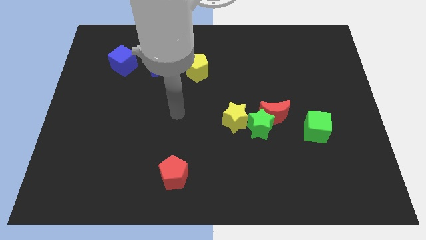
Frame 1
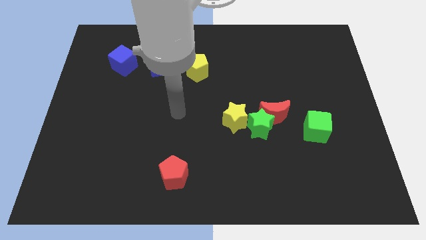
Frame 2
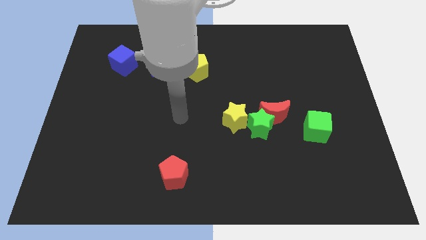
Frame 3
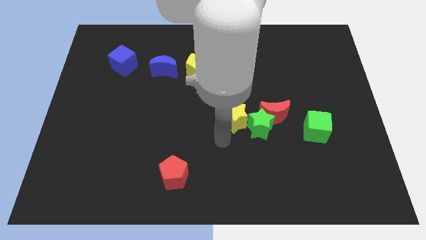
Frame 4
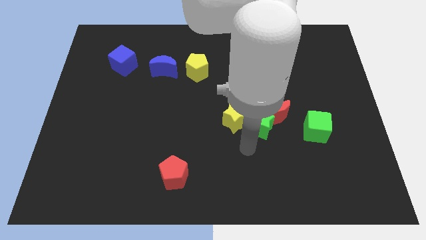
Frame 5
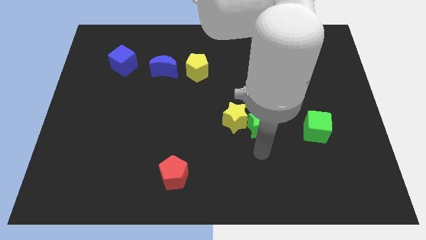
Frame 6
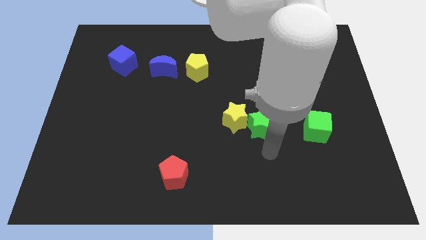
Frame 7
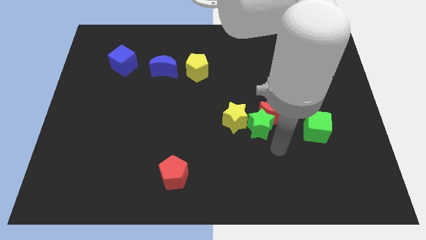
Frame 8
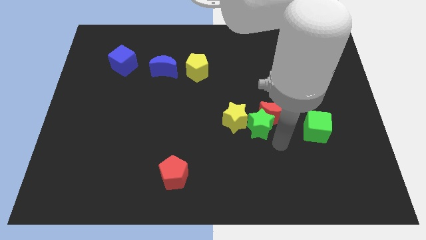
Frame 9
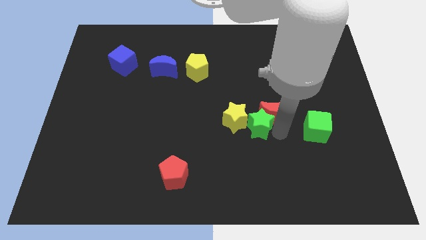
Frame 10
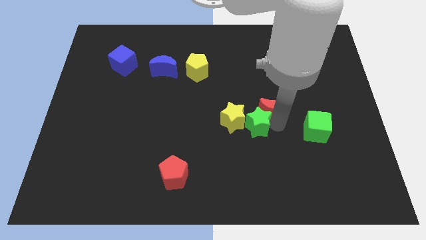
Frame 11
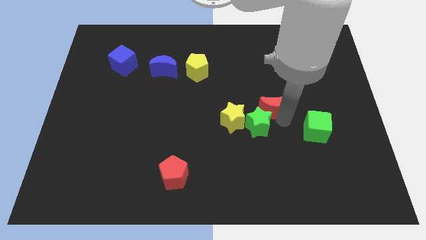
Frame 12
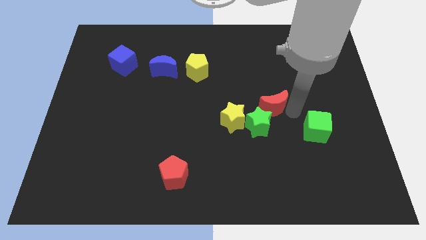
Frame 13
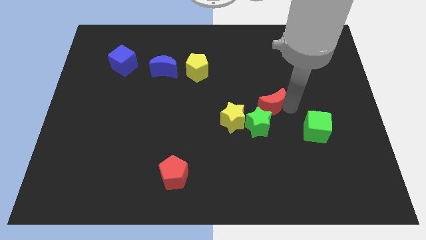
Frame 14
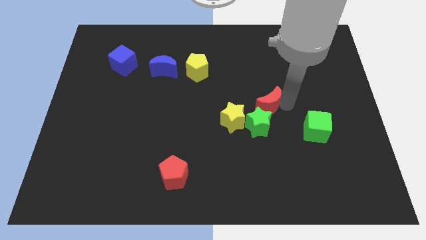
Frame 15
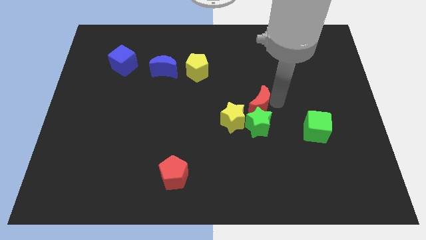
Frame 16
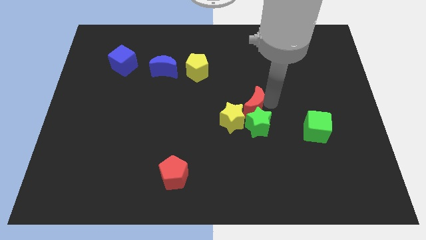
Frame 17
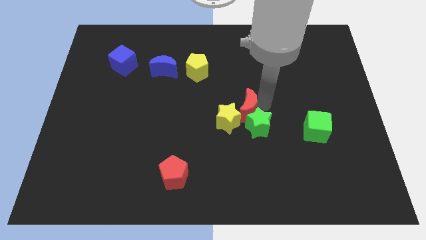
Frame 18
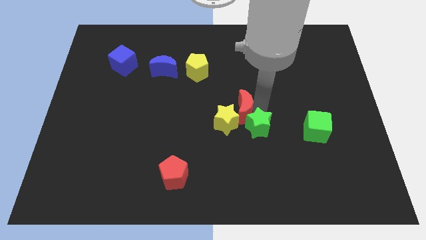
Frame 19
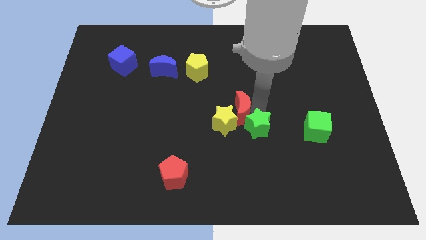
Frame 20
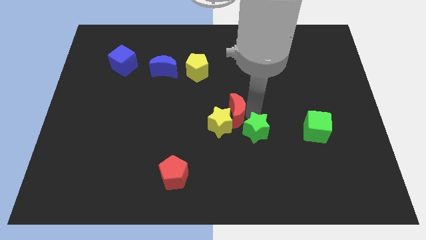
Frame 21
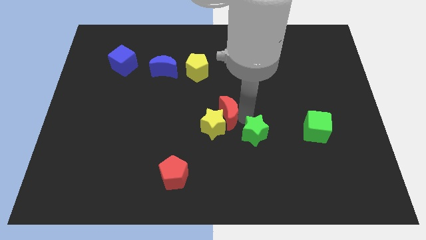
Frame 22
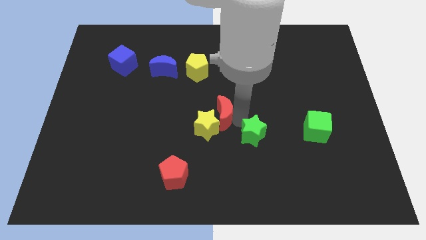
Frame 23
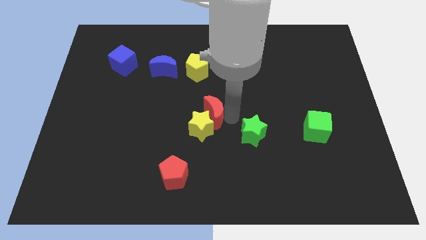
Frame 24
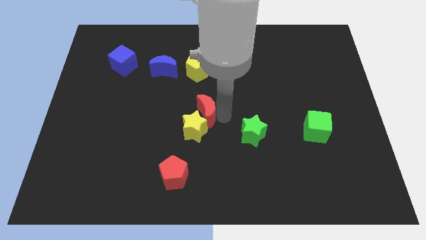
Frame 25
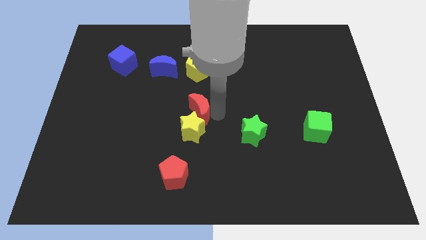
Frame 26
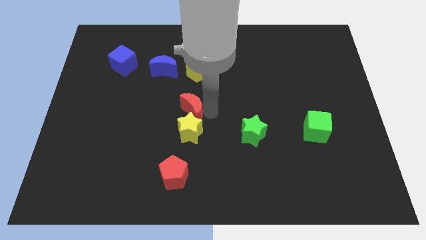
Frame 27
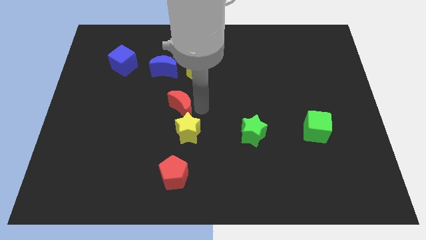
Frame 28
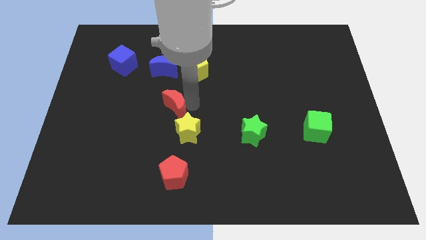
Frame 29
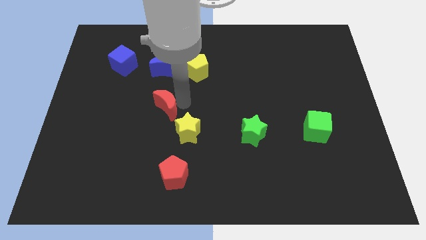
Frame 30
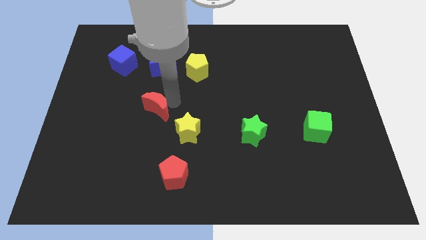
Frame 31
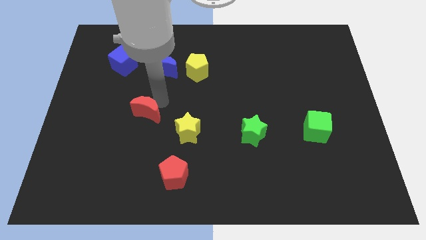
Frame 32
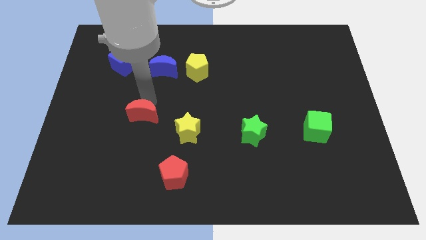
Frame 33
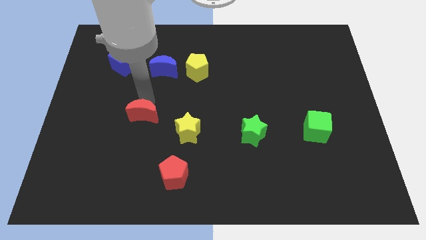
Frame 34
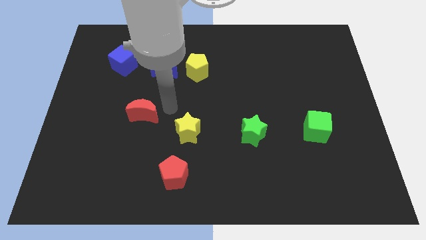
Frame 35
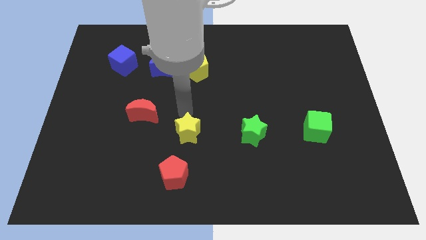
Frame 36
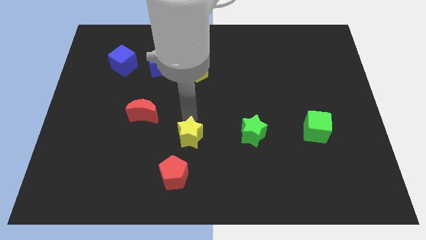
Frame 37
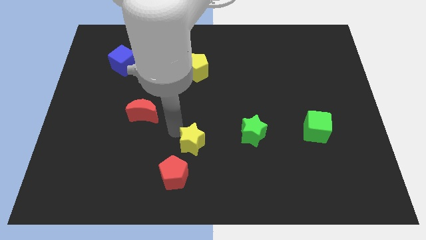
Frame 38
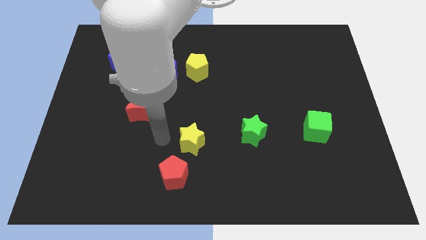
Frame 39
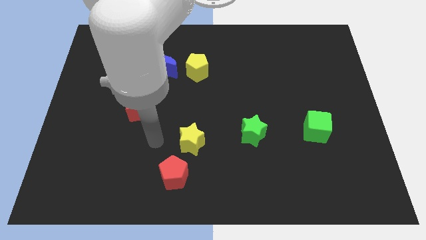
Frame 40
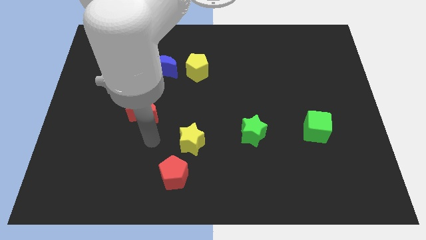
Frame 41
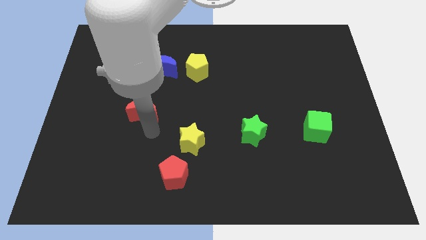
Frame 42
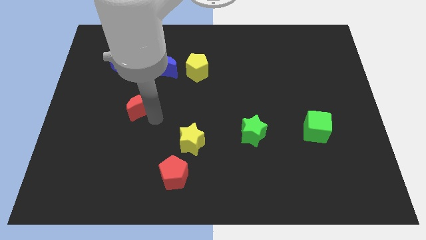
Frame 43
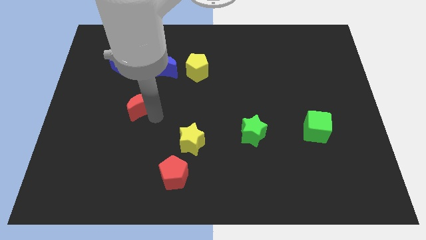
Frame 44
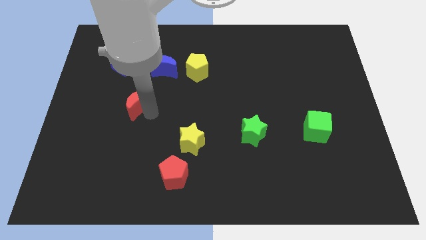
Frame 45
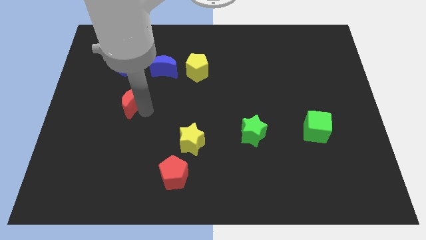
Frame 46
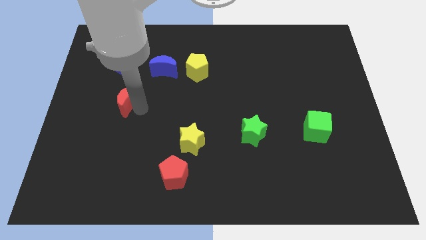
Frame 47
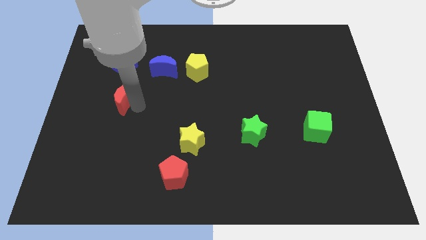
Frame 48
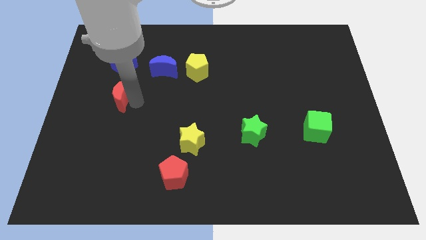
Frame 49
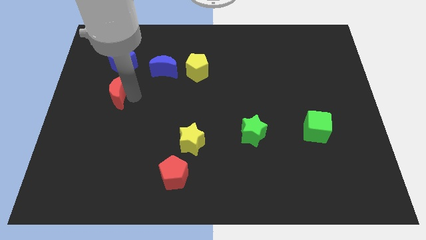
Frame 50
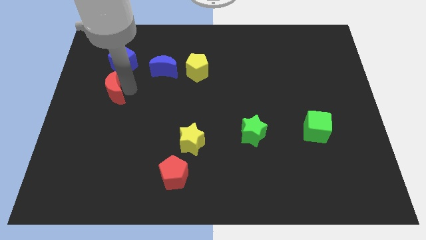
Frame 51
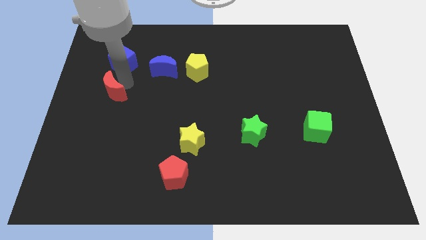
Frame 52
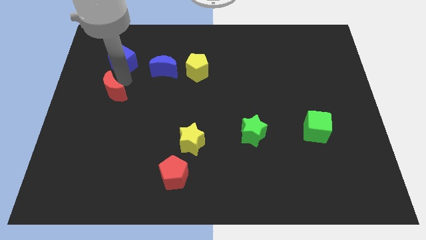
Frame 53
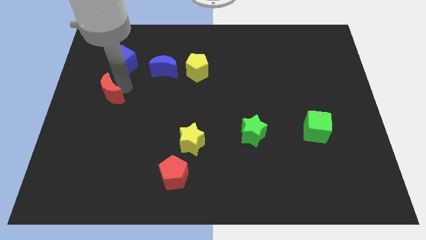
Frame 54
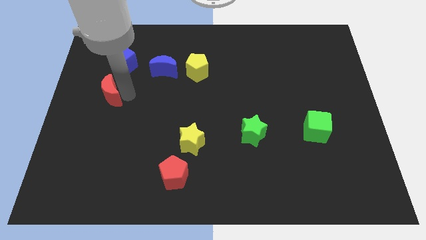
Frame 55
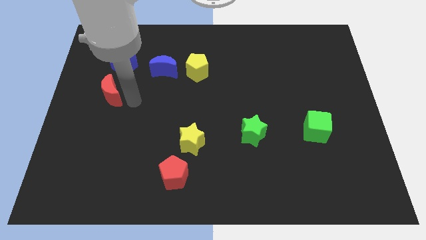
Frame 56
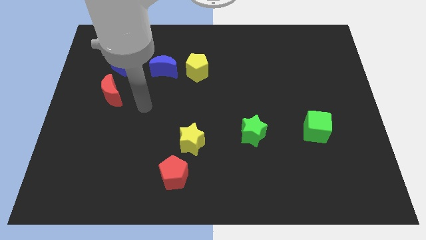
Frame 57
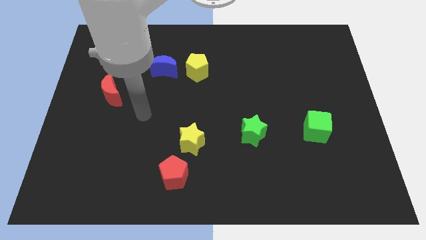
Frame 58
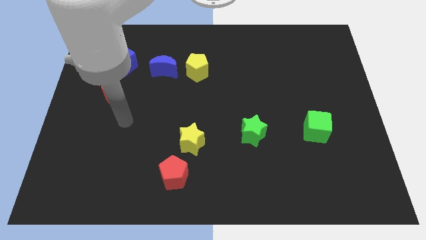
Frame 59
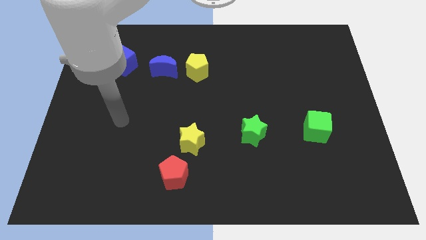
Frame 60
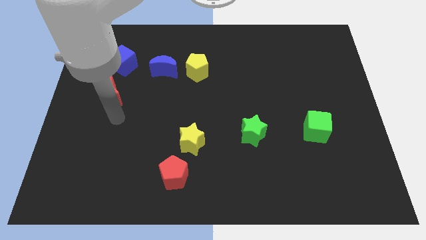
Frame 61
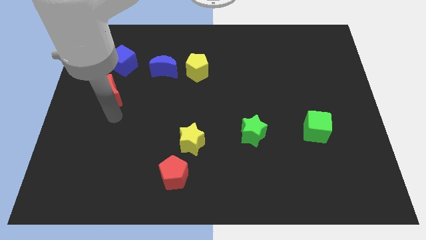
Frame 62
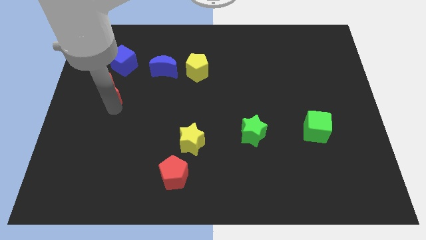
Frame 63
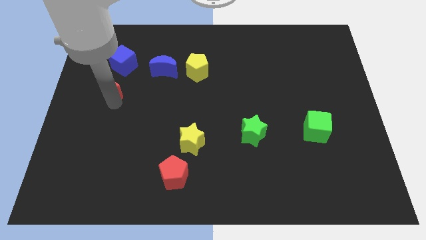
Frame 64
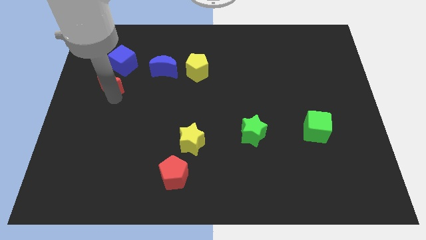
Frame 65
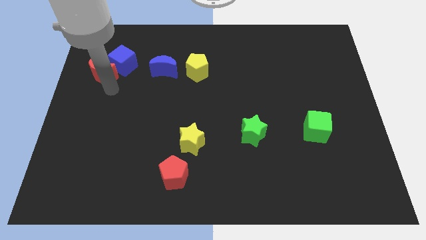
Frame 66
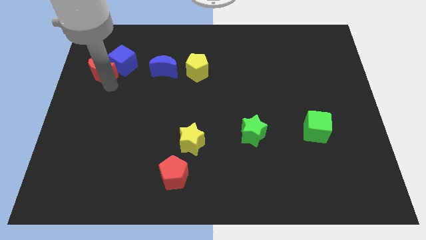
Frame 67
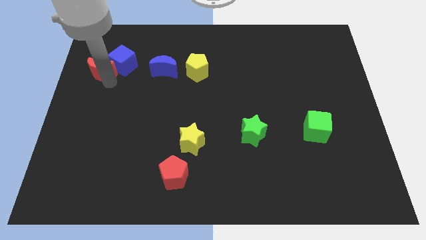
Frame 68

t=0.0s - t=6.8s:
push the red moon next to the blue cube

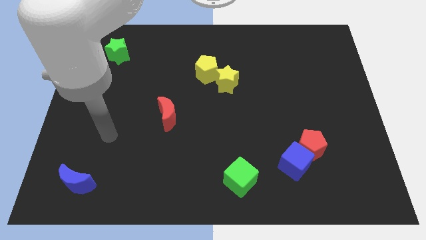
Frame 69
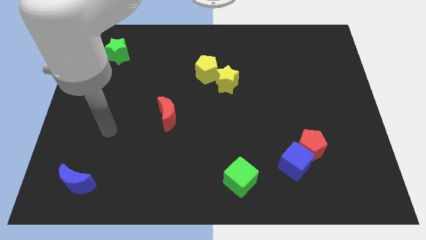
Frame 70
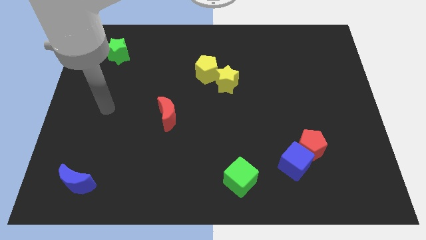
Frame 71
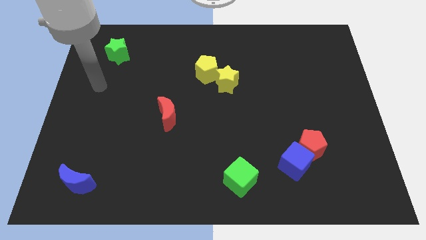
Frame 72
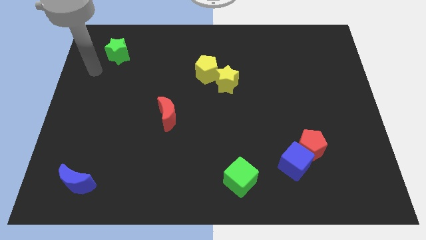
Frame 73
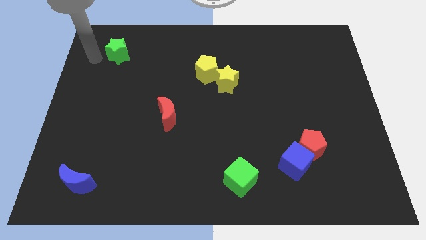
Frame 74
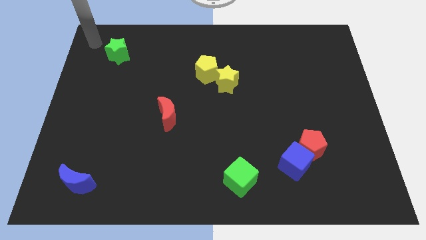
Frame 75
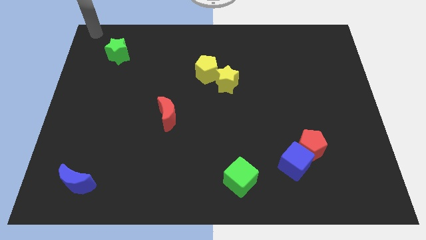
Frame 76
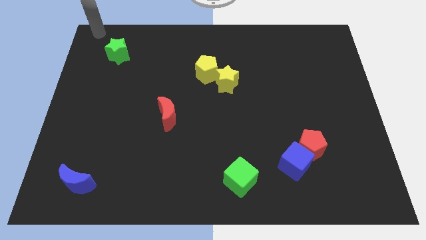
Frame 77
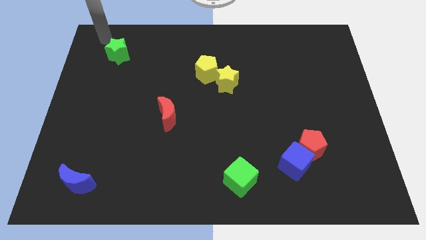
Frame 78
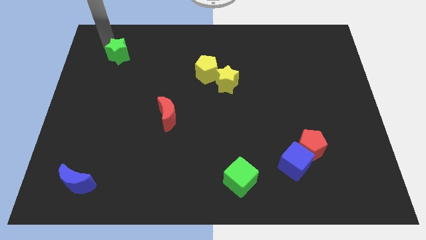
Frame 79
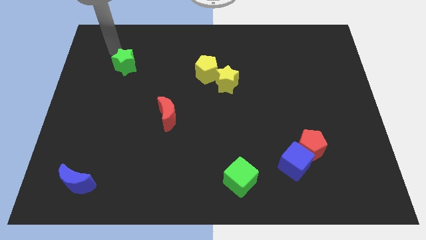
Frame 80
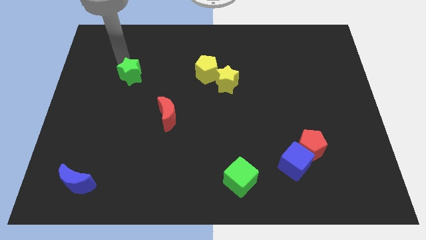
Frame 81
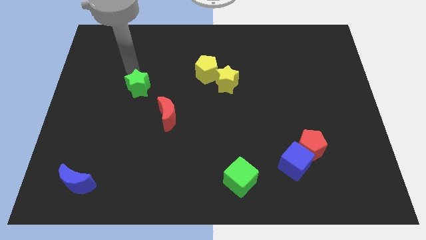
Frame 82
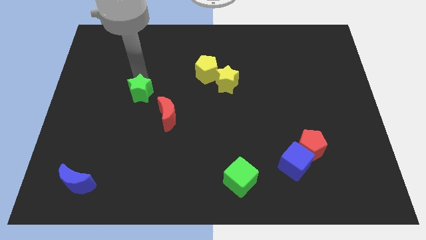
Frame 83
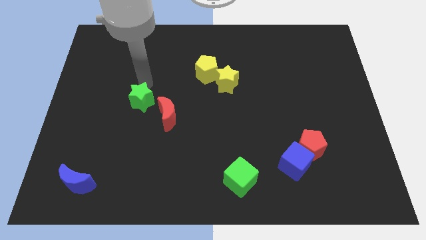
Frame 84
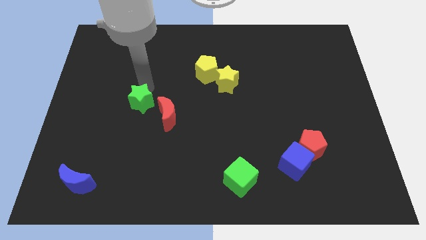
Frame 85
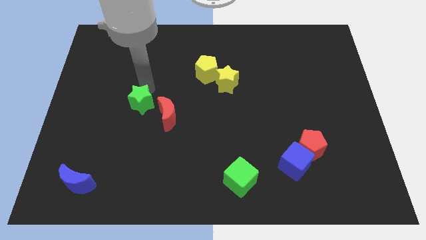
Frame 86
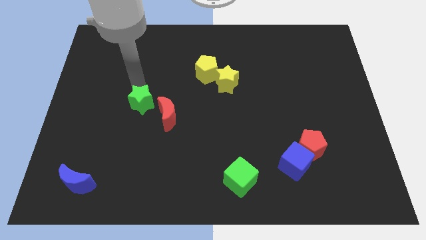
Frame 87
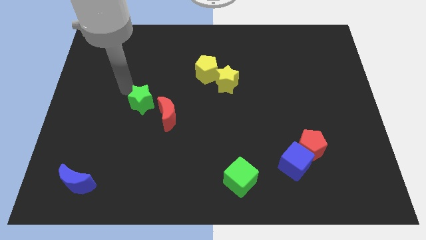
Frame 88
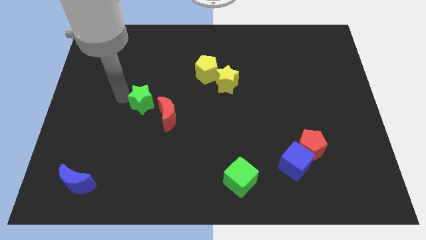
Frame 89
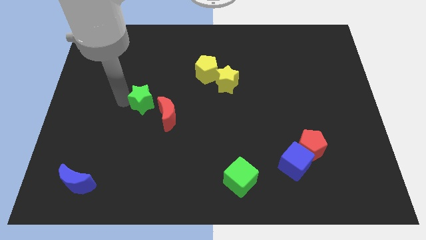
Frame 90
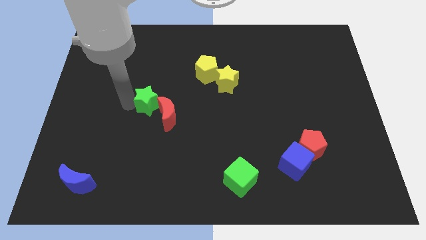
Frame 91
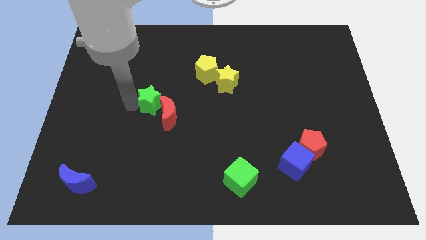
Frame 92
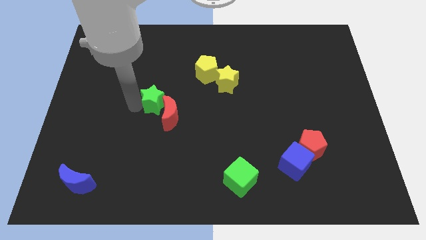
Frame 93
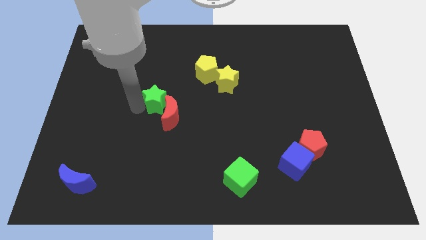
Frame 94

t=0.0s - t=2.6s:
put the green star close to the red moon
